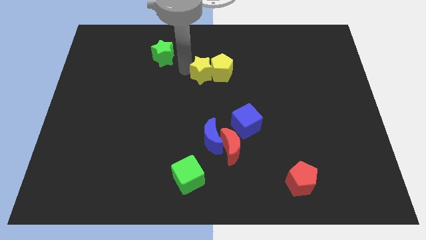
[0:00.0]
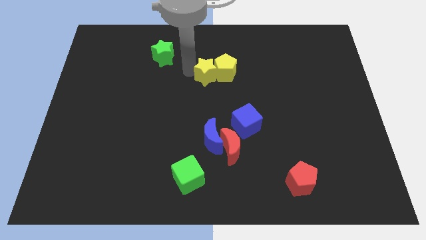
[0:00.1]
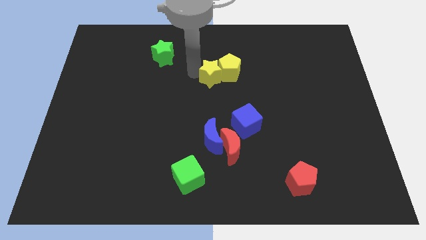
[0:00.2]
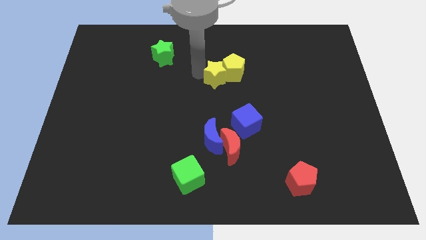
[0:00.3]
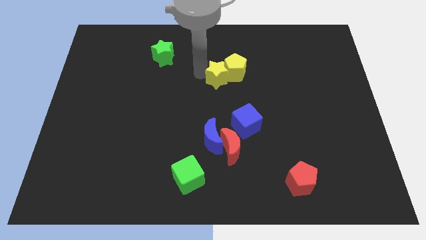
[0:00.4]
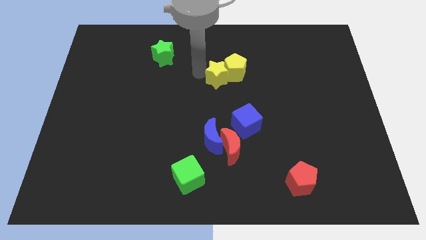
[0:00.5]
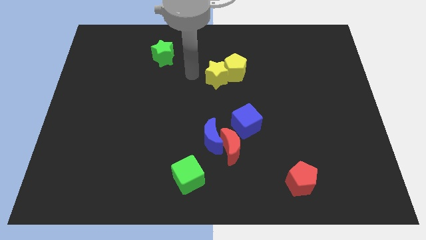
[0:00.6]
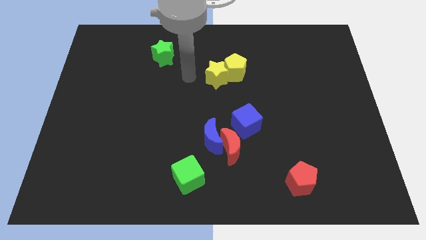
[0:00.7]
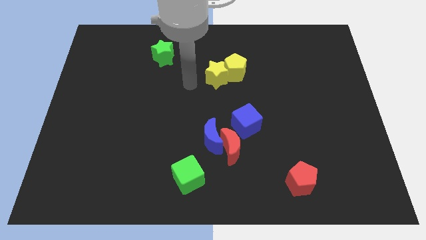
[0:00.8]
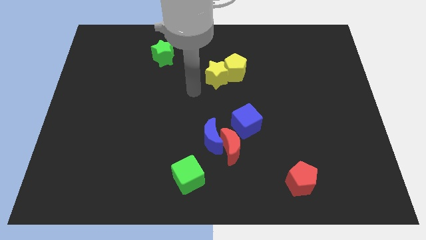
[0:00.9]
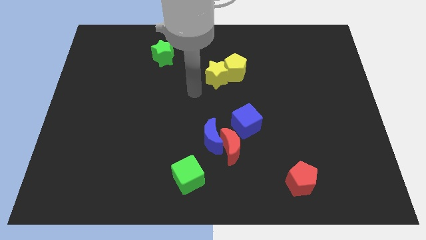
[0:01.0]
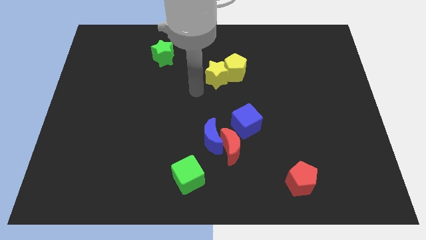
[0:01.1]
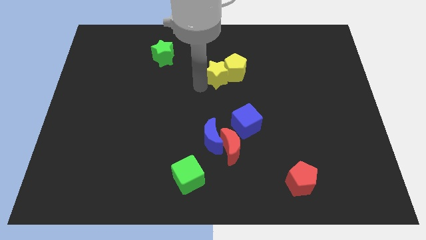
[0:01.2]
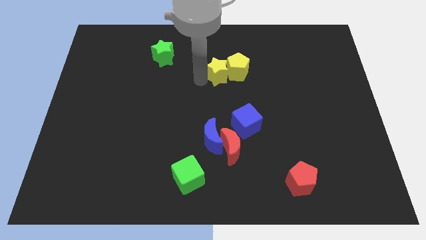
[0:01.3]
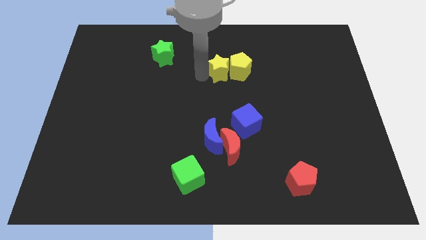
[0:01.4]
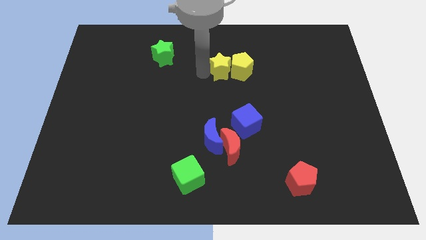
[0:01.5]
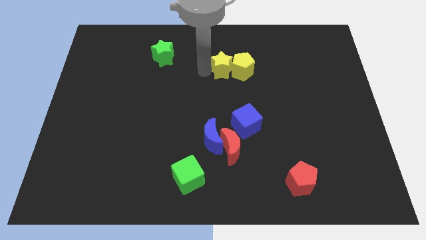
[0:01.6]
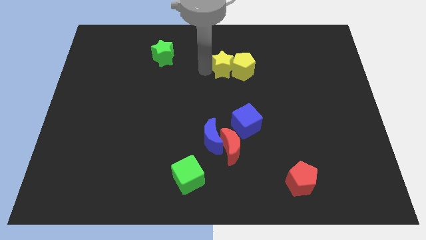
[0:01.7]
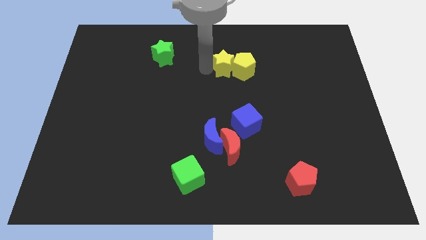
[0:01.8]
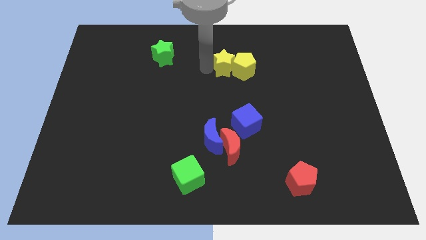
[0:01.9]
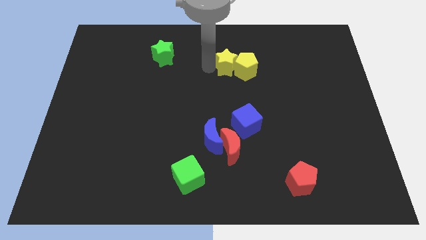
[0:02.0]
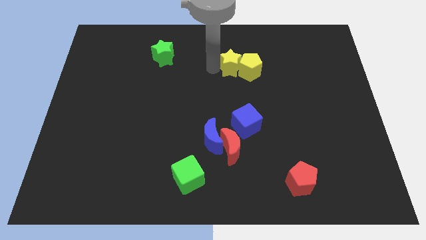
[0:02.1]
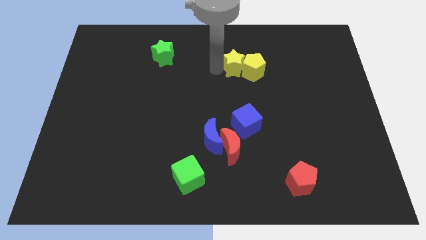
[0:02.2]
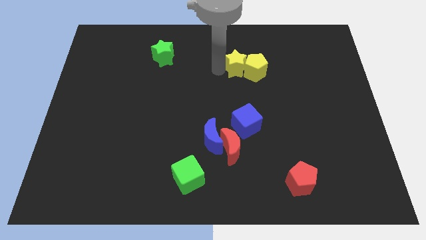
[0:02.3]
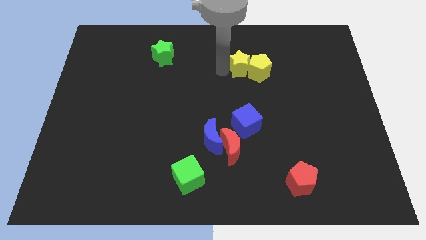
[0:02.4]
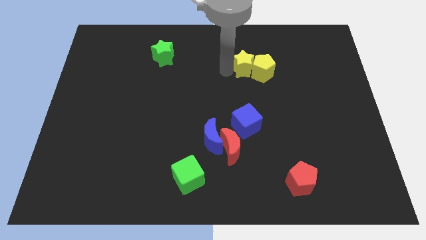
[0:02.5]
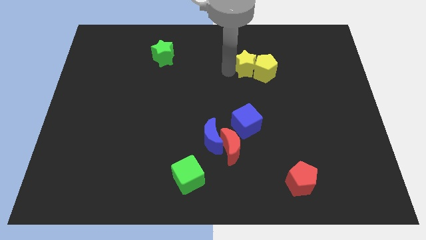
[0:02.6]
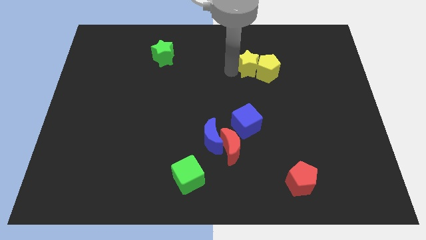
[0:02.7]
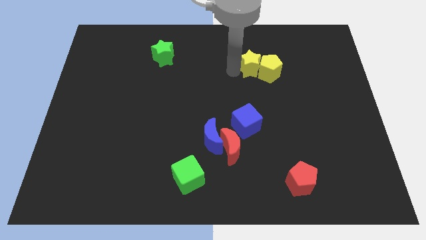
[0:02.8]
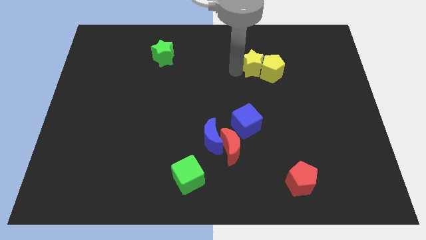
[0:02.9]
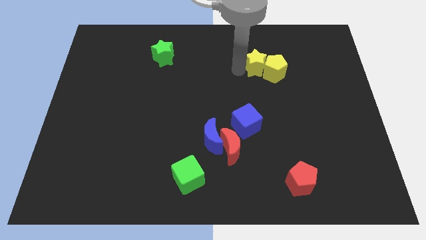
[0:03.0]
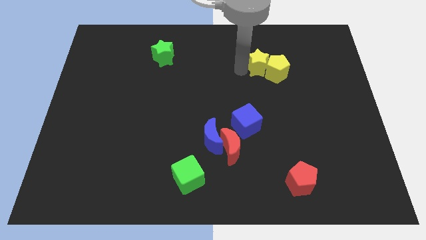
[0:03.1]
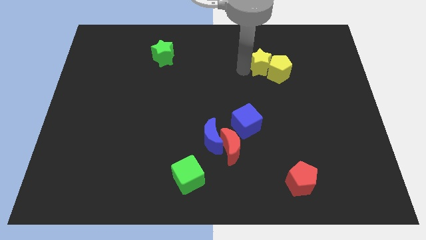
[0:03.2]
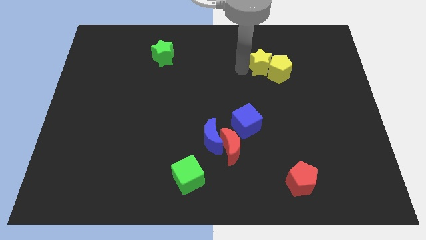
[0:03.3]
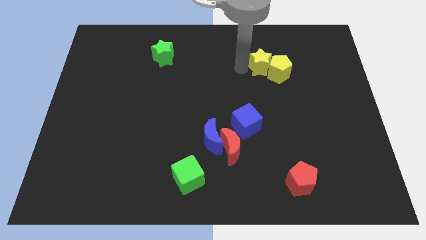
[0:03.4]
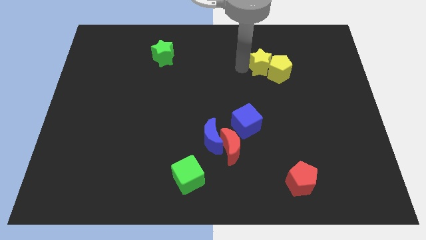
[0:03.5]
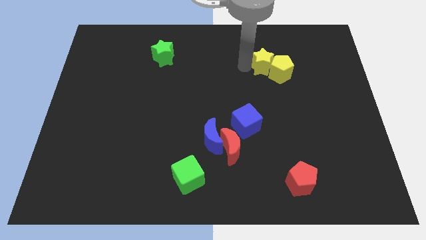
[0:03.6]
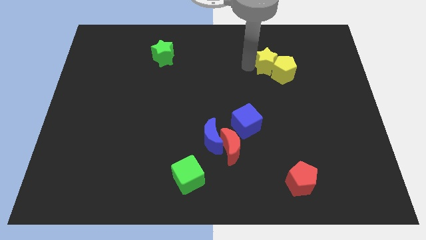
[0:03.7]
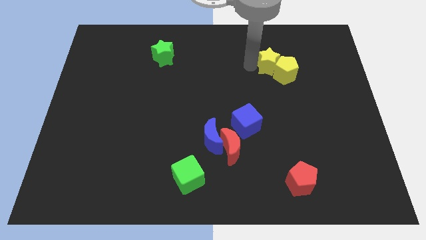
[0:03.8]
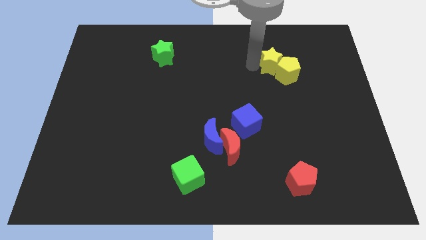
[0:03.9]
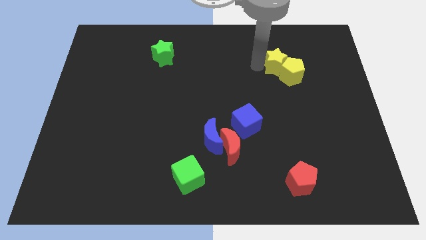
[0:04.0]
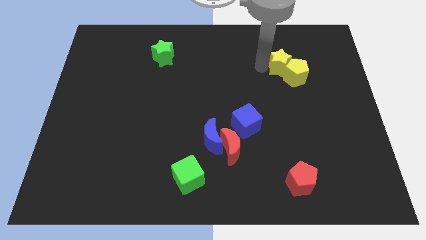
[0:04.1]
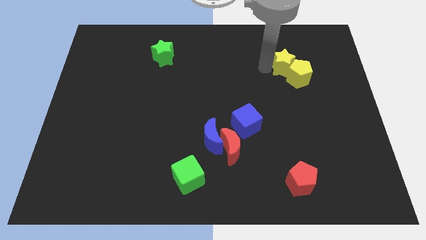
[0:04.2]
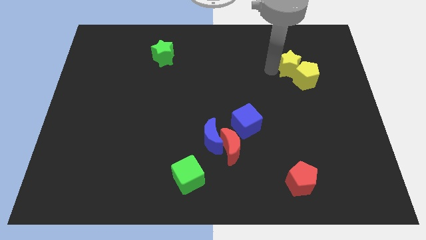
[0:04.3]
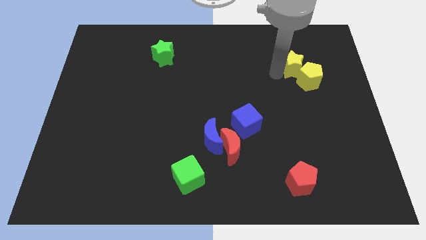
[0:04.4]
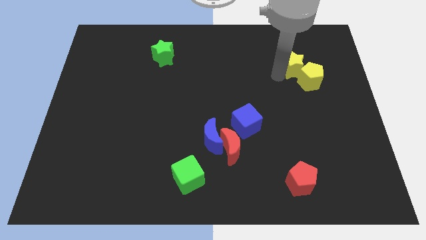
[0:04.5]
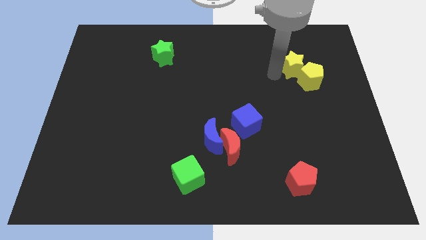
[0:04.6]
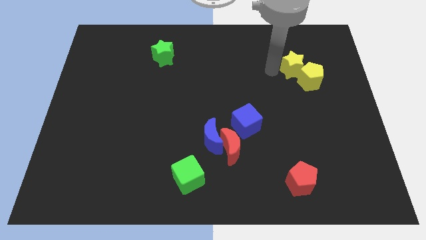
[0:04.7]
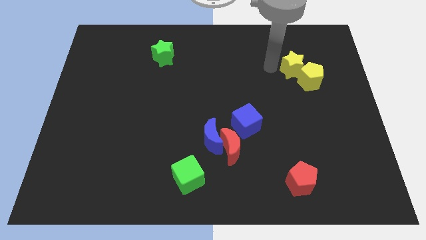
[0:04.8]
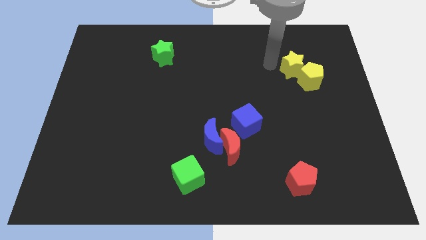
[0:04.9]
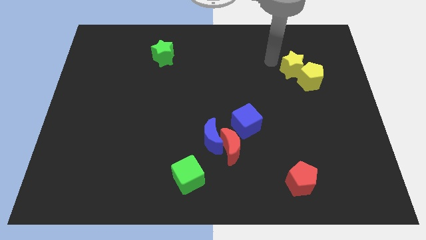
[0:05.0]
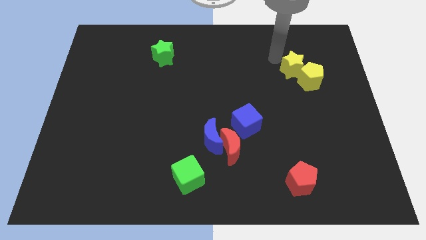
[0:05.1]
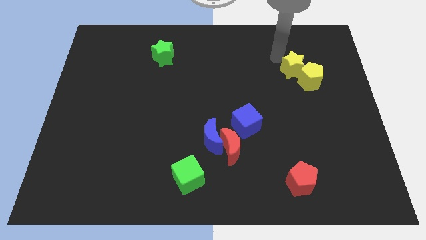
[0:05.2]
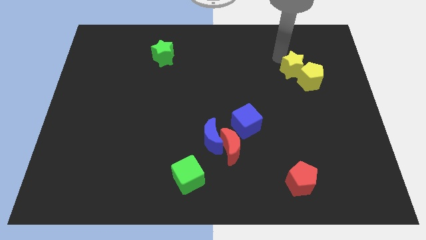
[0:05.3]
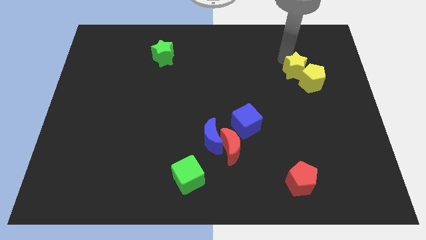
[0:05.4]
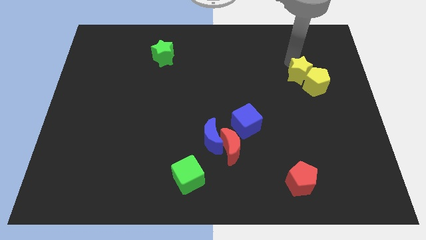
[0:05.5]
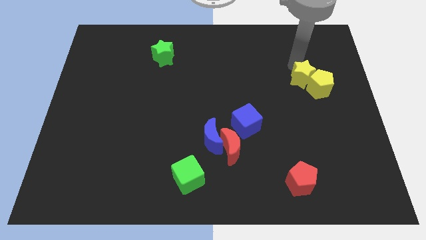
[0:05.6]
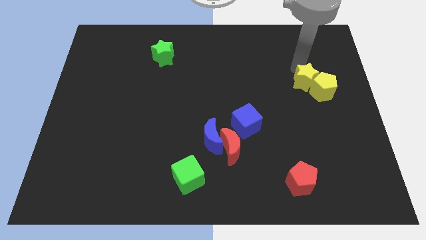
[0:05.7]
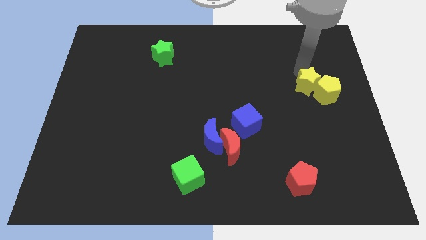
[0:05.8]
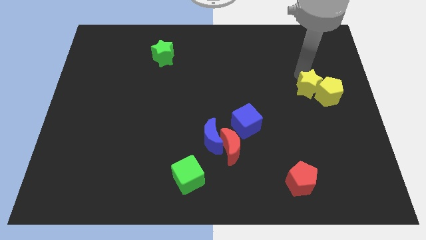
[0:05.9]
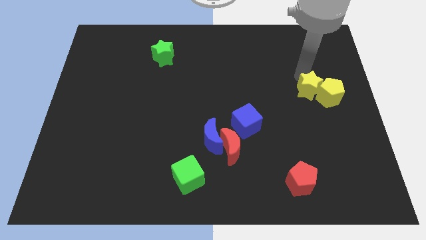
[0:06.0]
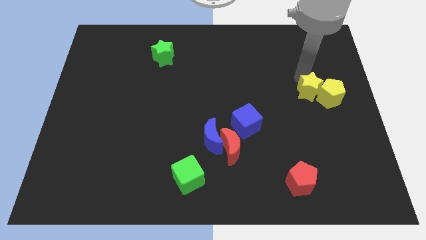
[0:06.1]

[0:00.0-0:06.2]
drag the yellow blocks to center right of the board

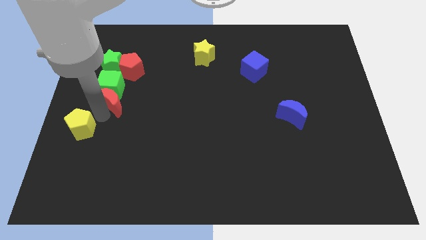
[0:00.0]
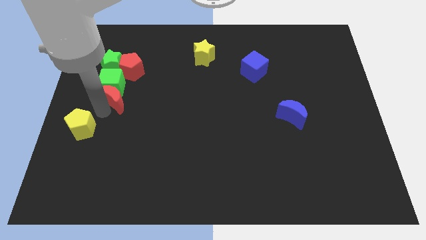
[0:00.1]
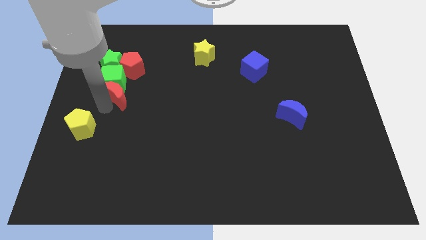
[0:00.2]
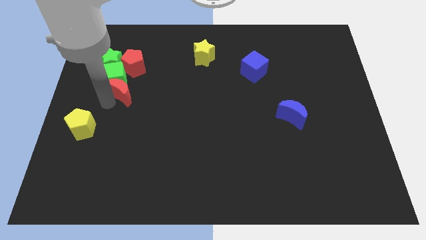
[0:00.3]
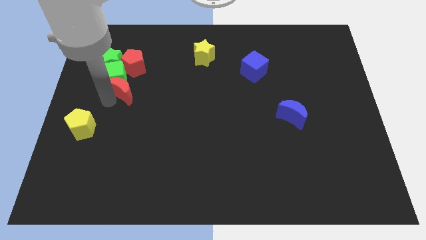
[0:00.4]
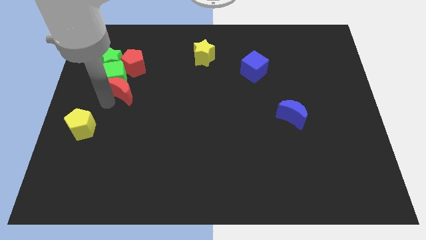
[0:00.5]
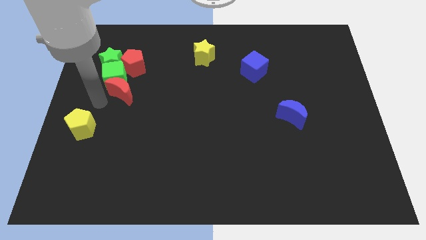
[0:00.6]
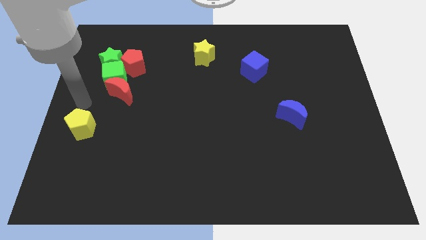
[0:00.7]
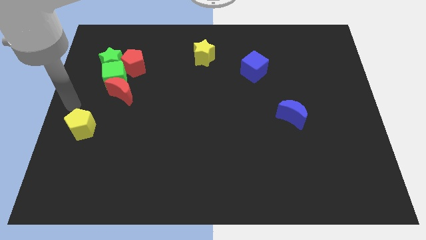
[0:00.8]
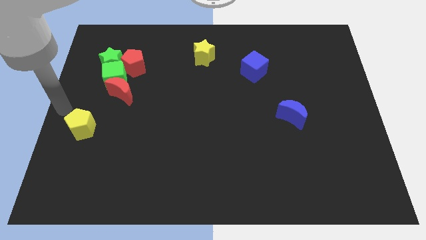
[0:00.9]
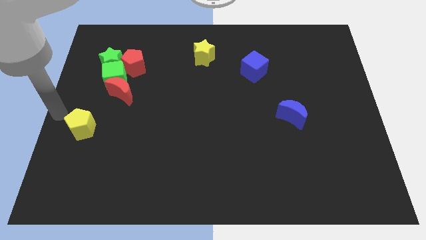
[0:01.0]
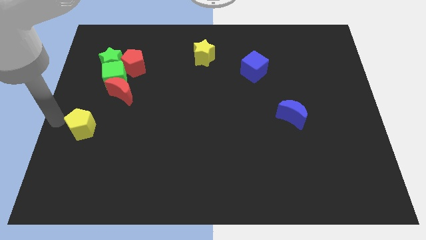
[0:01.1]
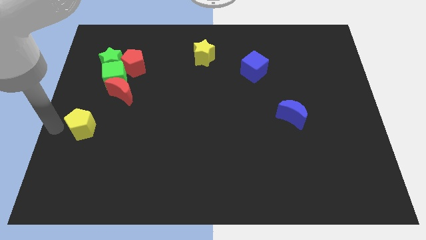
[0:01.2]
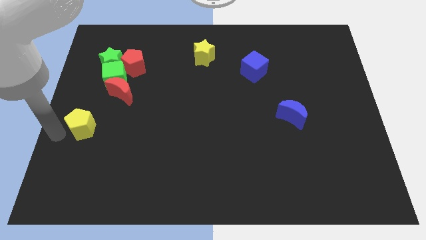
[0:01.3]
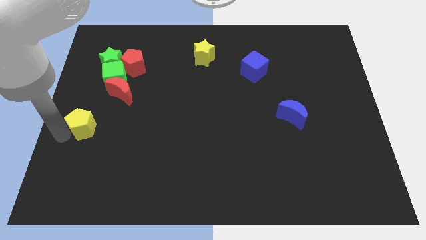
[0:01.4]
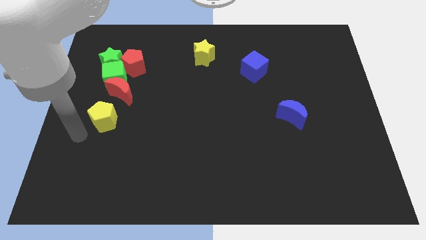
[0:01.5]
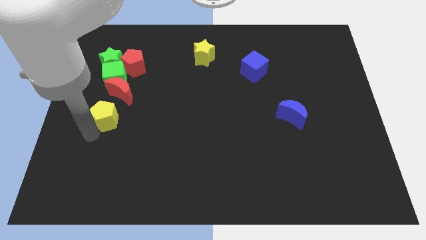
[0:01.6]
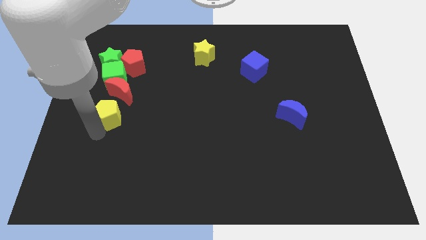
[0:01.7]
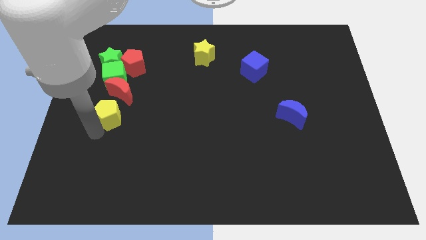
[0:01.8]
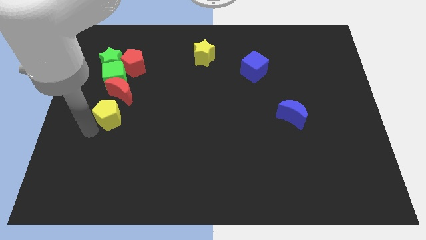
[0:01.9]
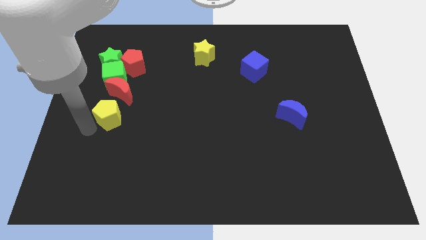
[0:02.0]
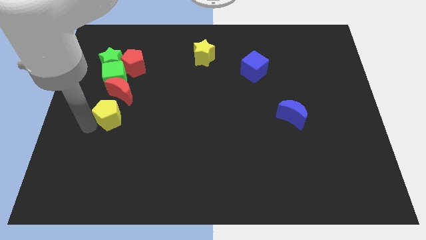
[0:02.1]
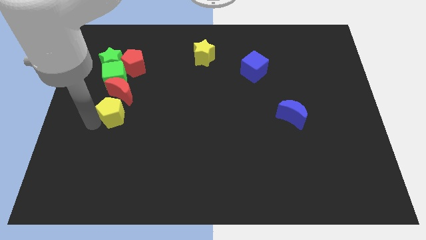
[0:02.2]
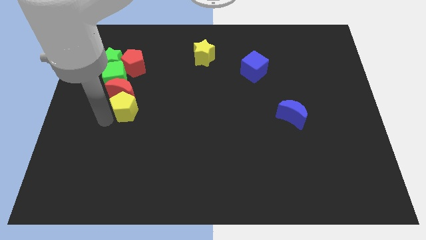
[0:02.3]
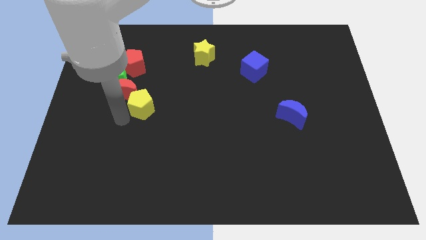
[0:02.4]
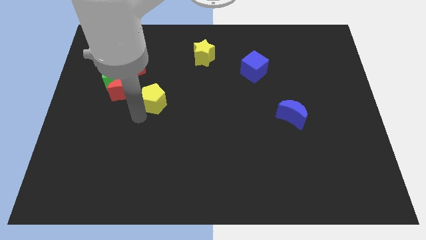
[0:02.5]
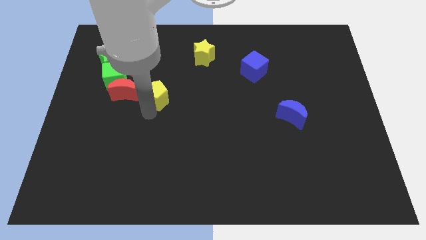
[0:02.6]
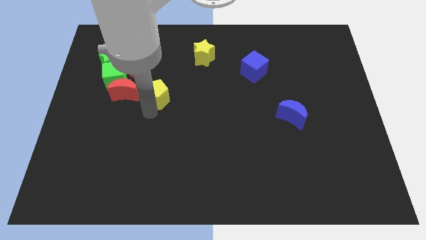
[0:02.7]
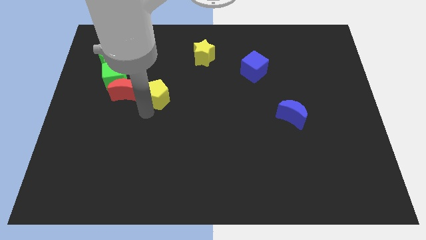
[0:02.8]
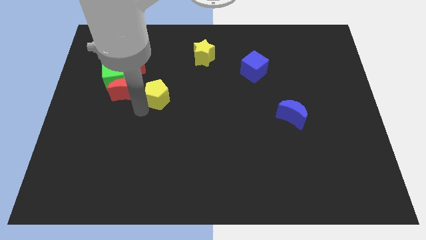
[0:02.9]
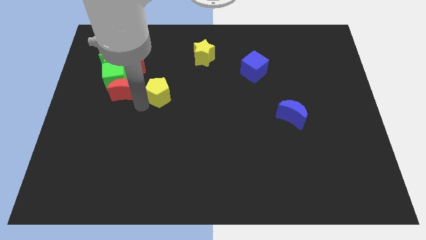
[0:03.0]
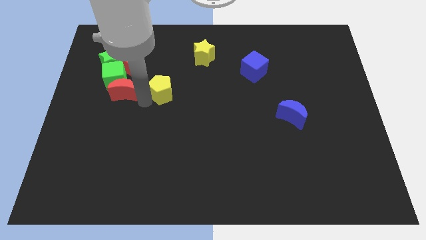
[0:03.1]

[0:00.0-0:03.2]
slide the yellow pentagon towards the top center
